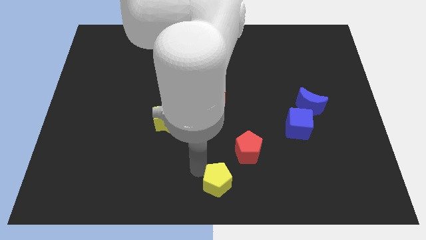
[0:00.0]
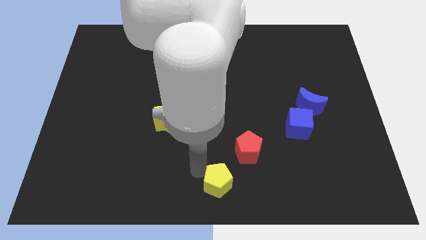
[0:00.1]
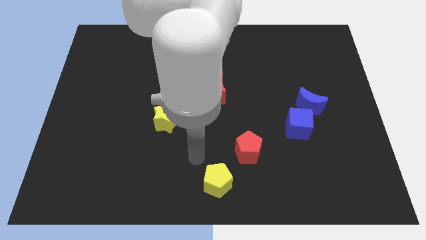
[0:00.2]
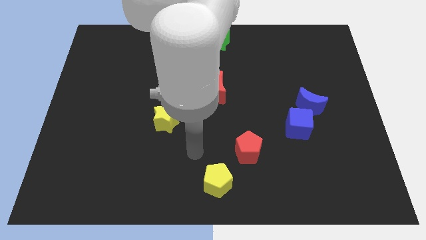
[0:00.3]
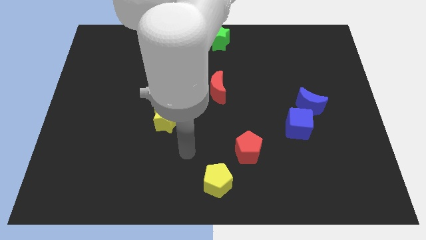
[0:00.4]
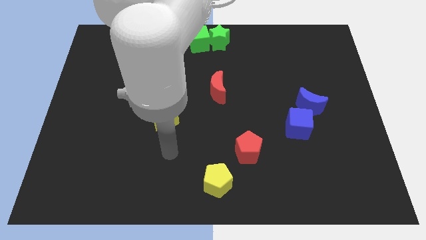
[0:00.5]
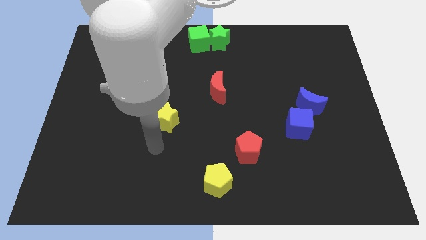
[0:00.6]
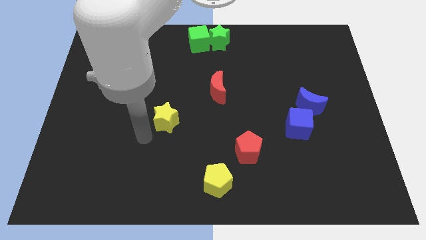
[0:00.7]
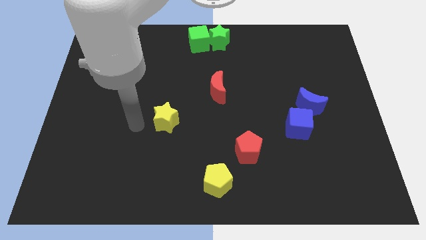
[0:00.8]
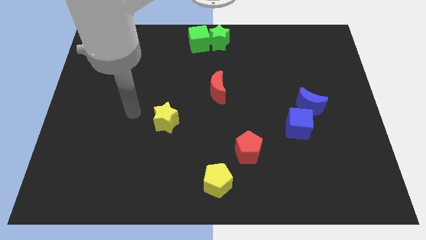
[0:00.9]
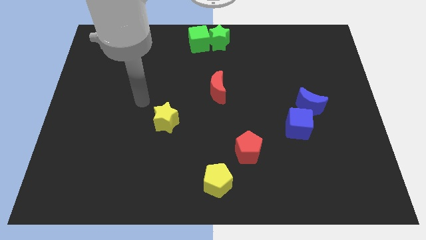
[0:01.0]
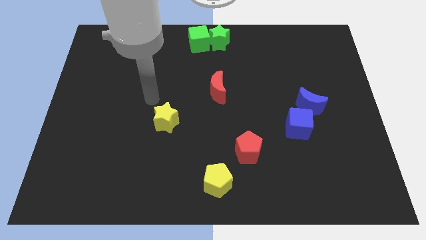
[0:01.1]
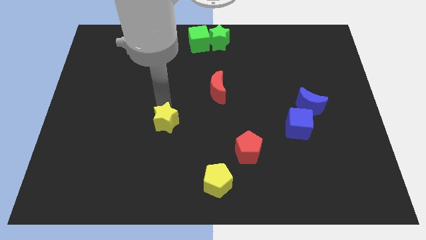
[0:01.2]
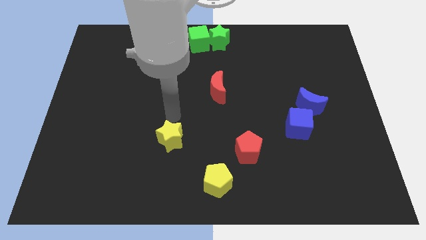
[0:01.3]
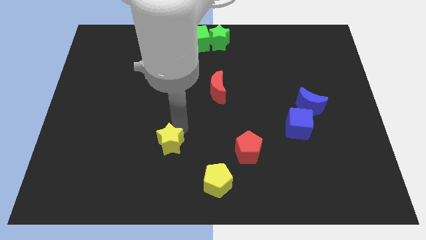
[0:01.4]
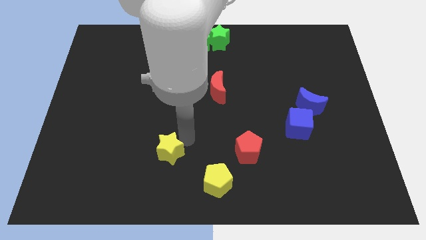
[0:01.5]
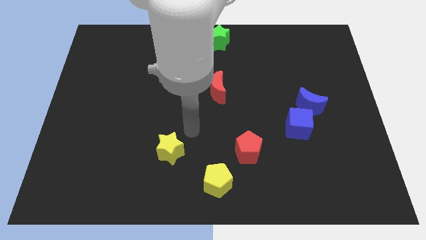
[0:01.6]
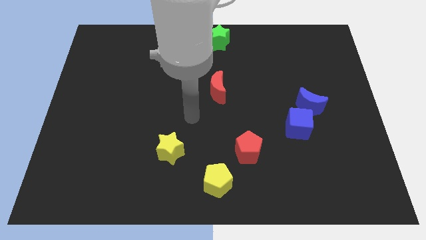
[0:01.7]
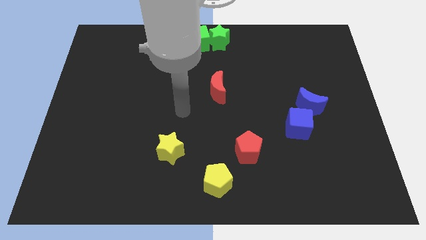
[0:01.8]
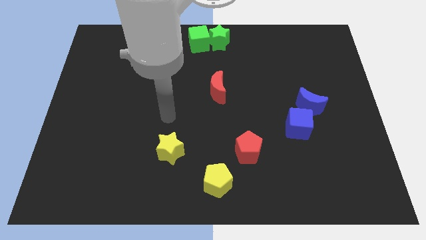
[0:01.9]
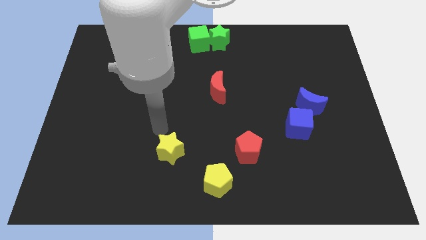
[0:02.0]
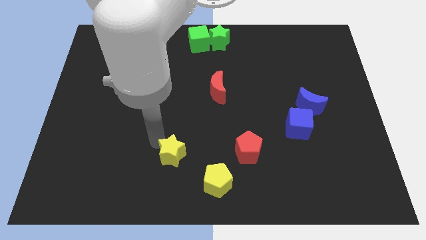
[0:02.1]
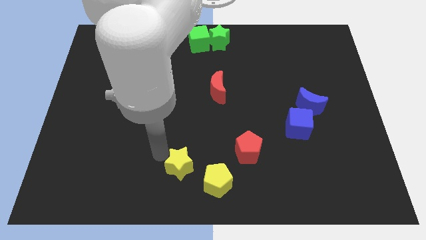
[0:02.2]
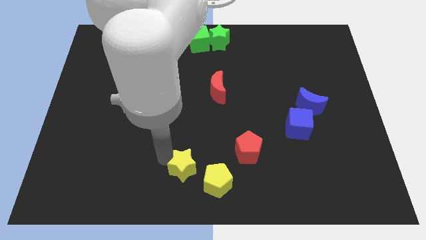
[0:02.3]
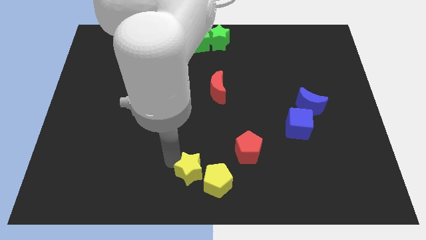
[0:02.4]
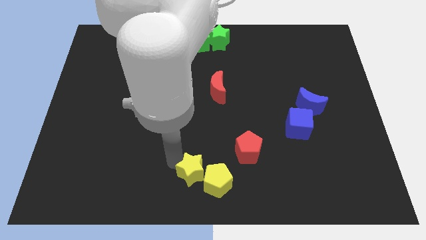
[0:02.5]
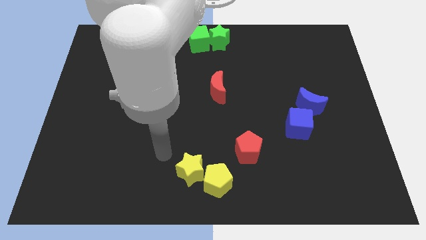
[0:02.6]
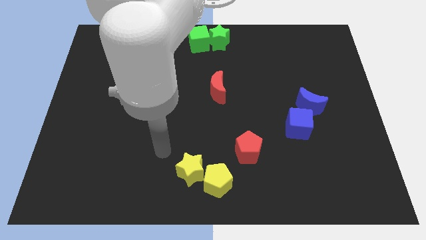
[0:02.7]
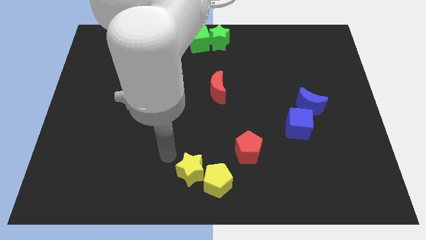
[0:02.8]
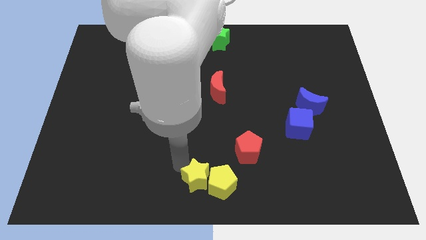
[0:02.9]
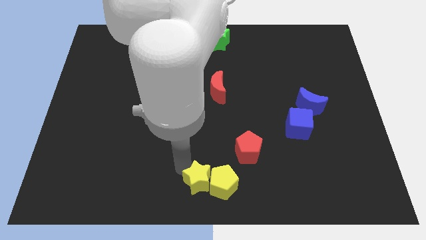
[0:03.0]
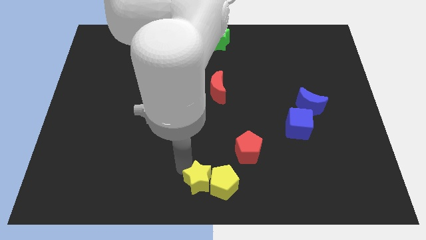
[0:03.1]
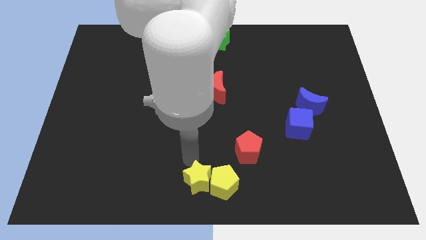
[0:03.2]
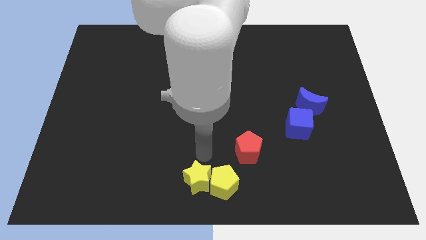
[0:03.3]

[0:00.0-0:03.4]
push the yellow star left to the yellow pentagon

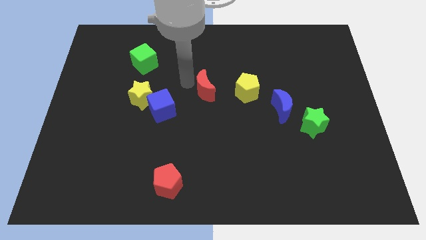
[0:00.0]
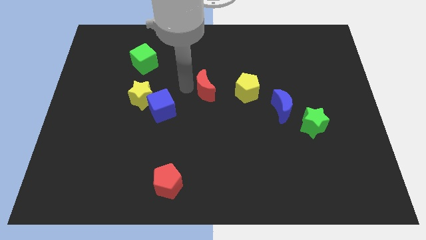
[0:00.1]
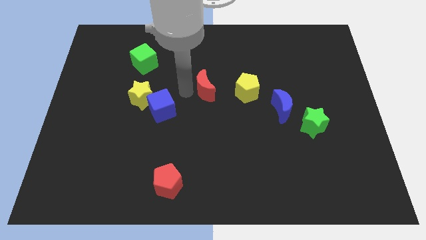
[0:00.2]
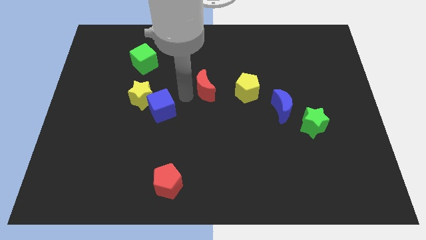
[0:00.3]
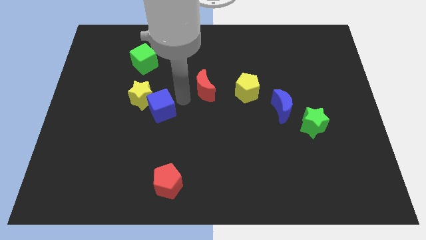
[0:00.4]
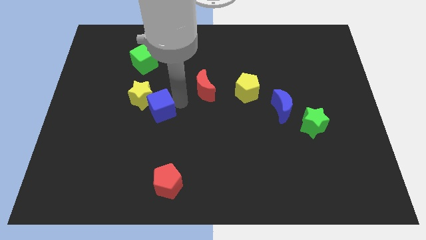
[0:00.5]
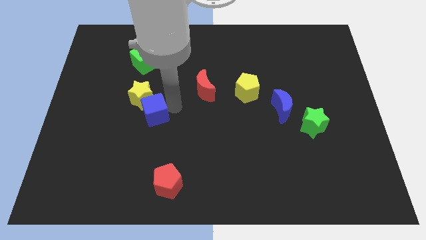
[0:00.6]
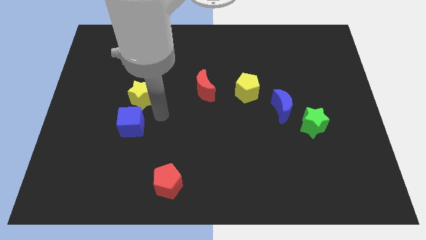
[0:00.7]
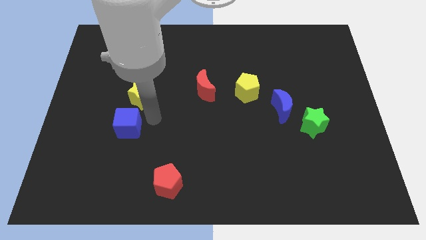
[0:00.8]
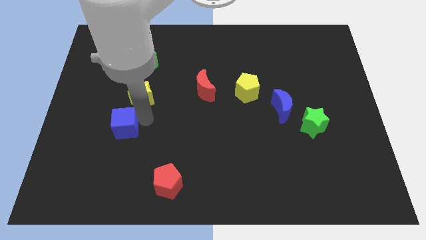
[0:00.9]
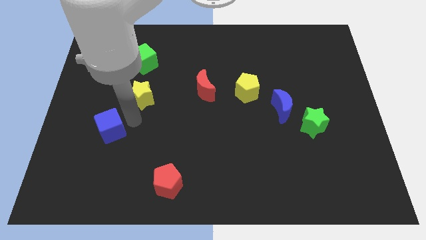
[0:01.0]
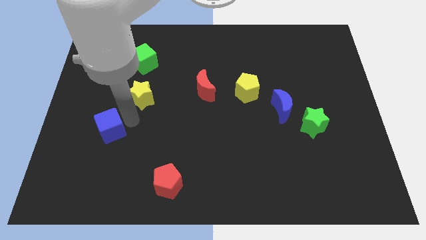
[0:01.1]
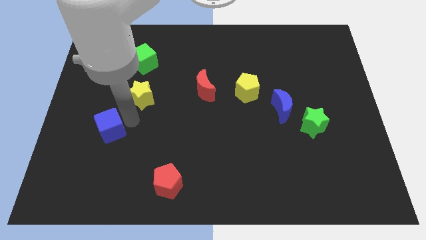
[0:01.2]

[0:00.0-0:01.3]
move the blue cube towards the bottom left of the yellow star

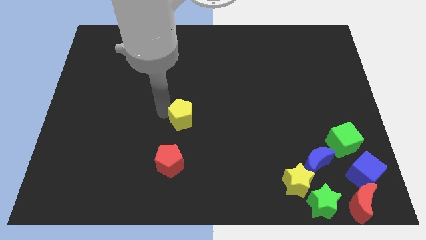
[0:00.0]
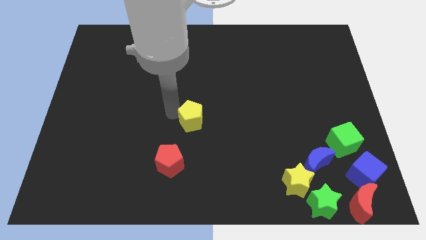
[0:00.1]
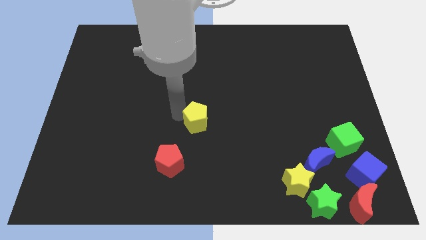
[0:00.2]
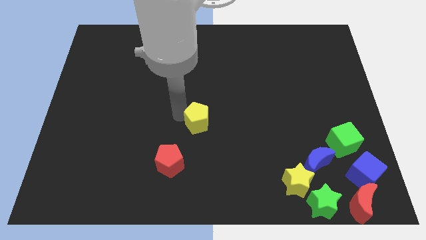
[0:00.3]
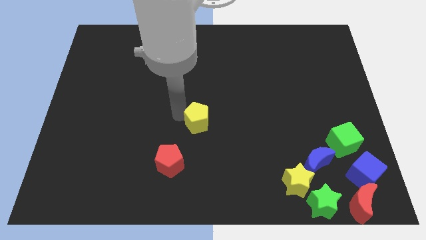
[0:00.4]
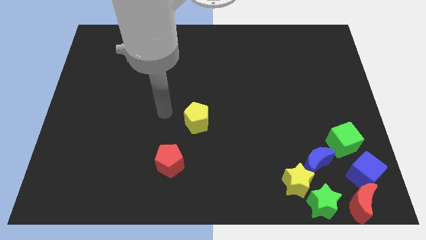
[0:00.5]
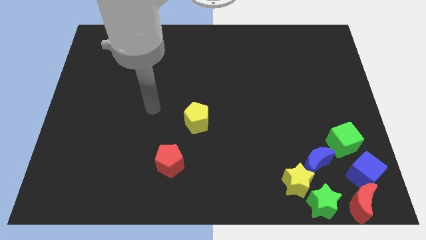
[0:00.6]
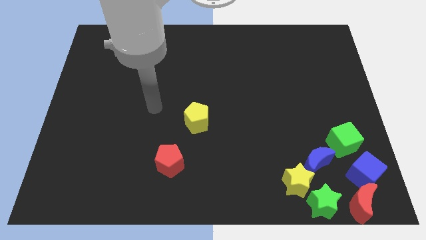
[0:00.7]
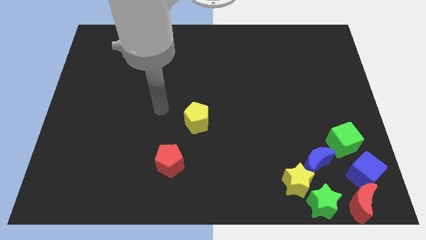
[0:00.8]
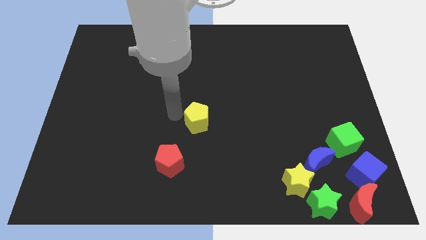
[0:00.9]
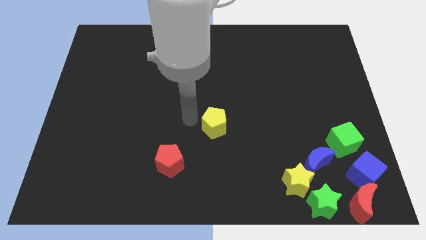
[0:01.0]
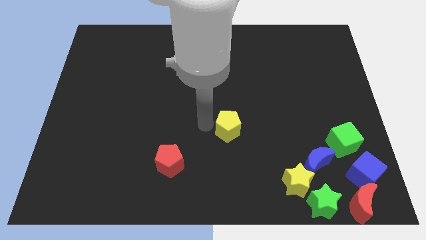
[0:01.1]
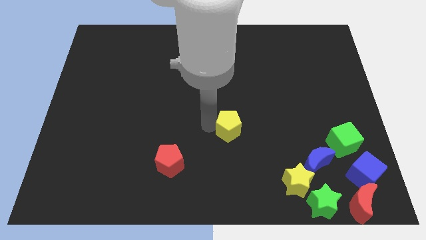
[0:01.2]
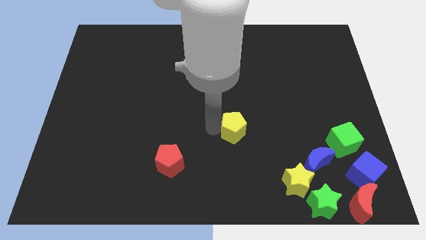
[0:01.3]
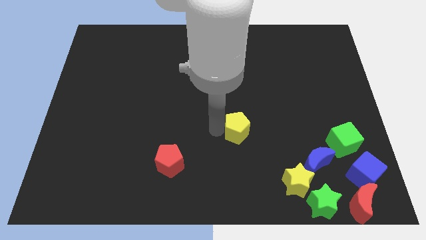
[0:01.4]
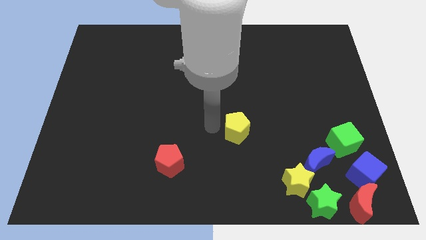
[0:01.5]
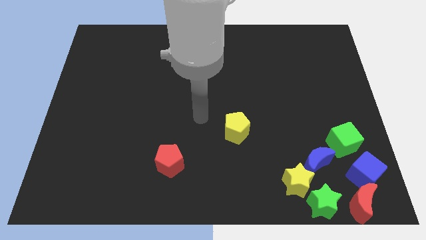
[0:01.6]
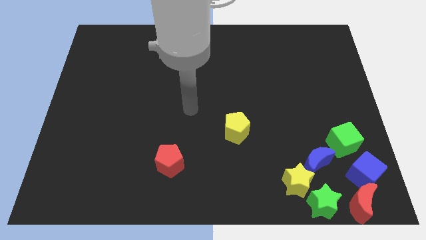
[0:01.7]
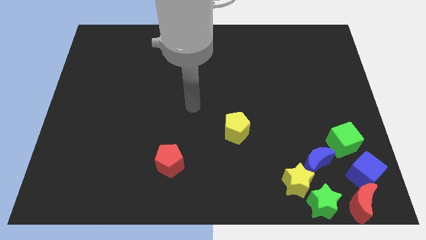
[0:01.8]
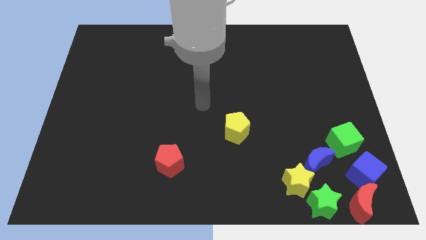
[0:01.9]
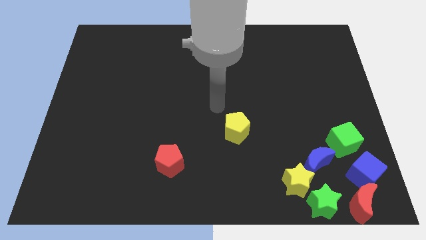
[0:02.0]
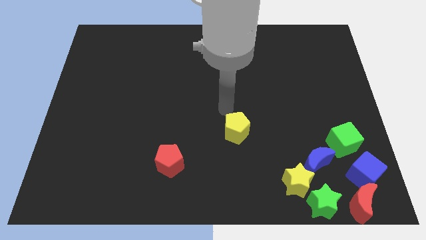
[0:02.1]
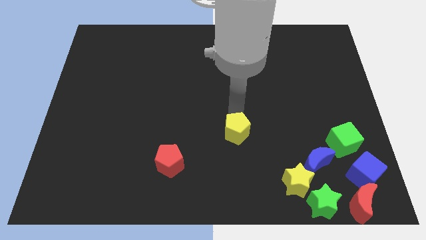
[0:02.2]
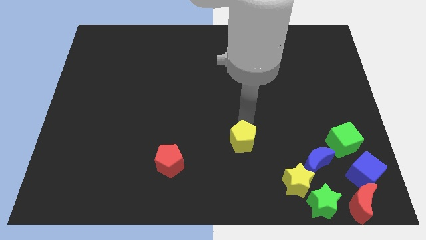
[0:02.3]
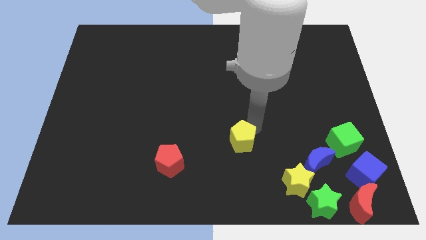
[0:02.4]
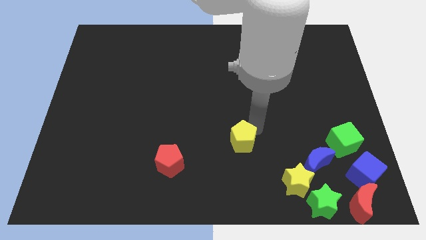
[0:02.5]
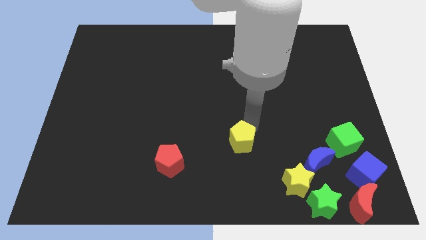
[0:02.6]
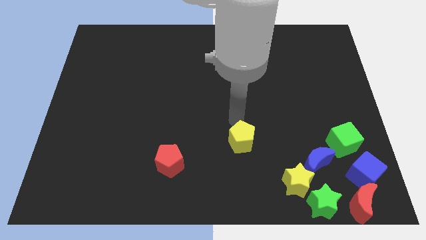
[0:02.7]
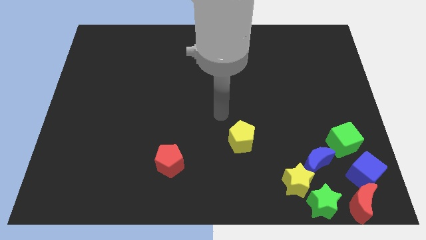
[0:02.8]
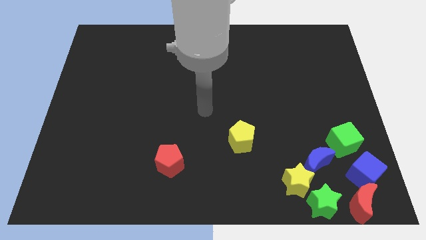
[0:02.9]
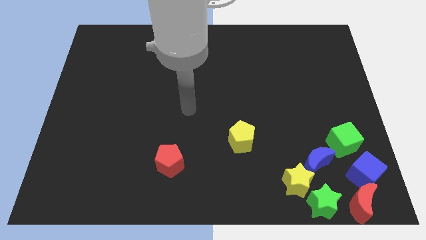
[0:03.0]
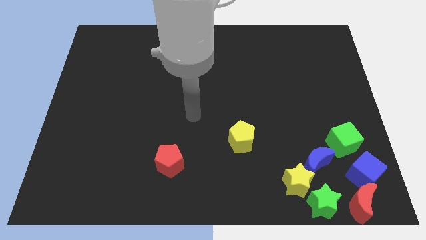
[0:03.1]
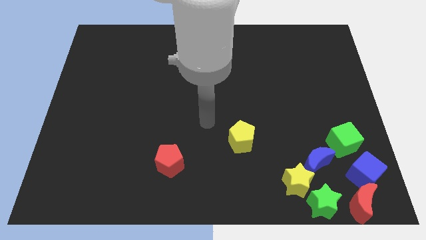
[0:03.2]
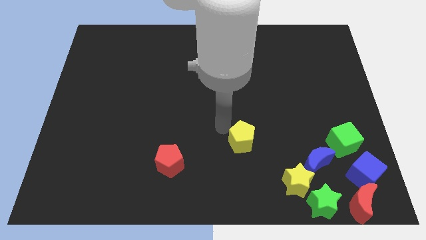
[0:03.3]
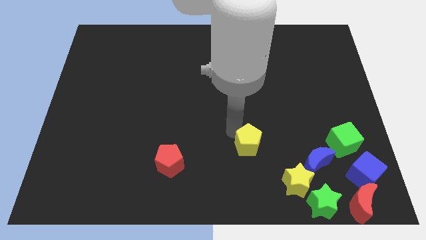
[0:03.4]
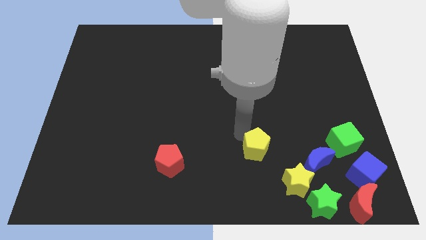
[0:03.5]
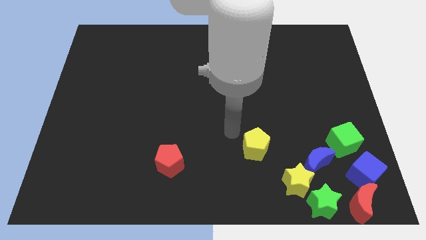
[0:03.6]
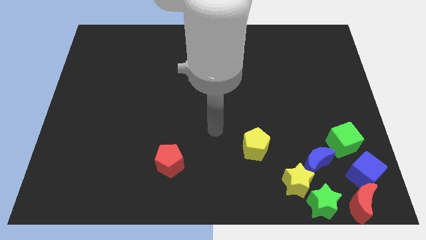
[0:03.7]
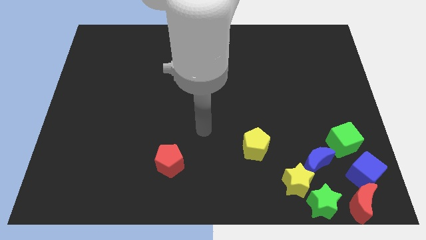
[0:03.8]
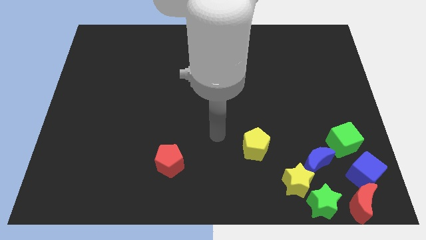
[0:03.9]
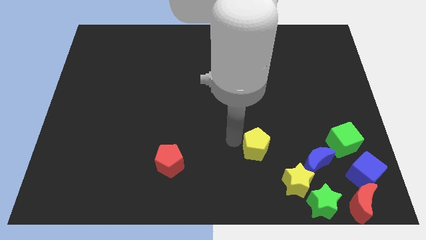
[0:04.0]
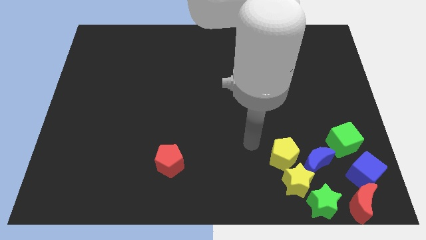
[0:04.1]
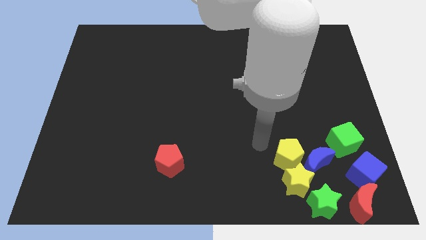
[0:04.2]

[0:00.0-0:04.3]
place the yellow pentagon to the top of the yellow star
